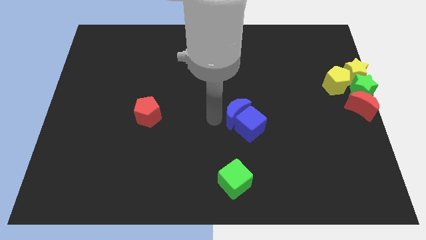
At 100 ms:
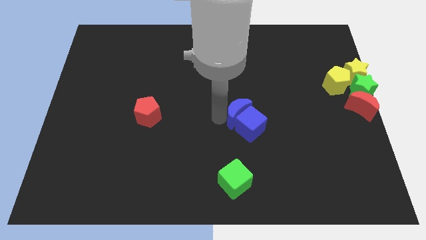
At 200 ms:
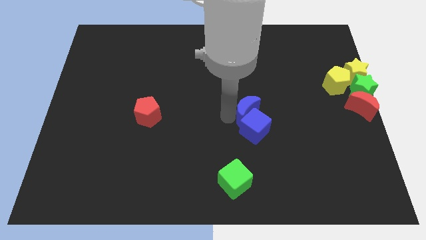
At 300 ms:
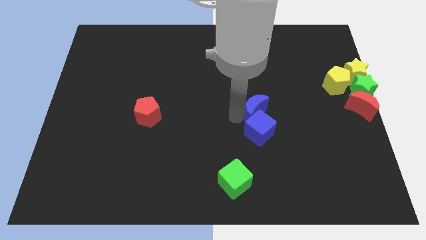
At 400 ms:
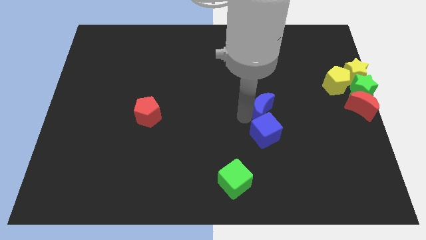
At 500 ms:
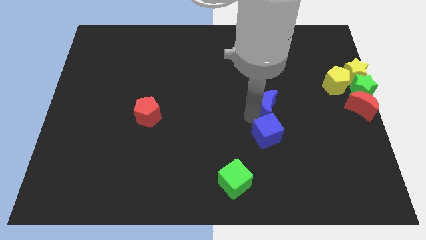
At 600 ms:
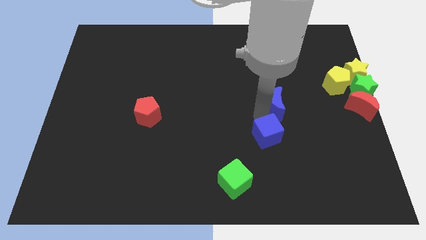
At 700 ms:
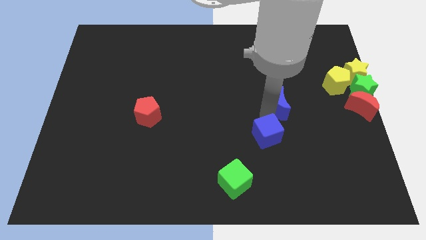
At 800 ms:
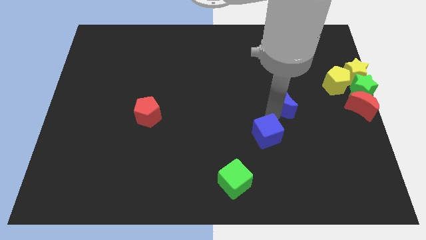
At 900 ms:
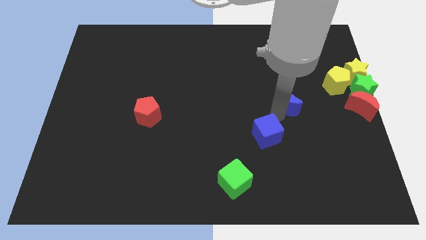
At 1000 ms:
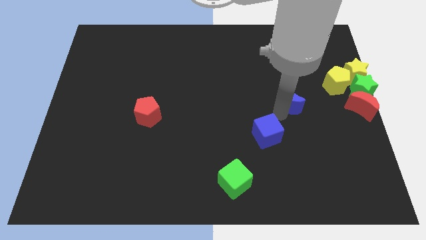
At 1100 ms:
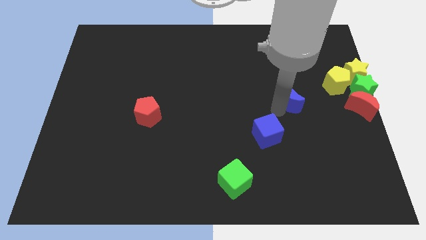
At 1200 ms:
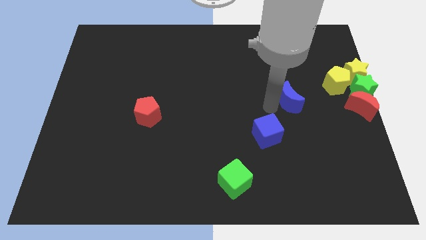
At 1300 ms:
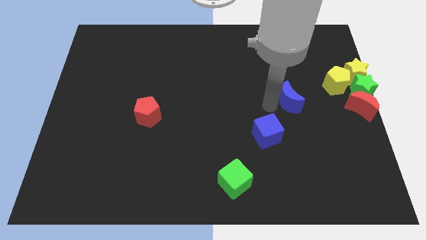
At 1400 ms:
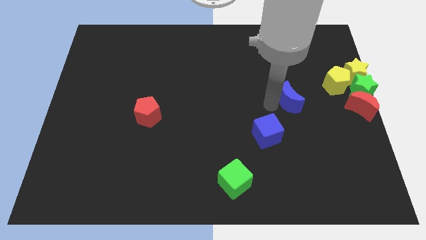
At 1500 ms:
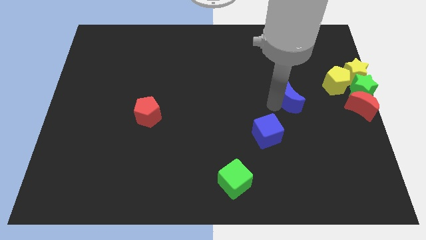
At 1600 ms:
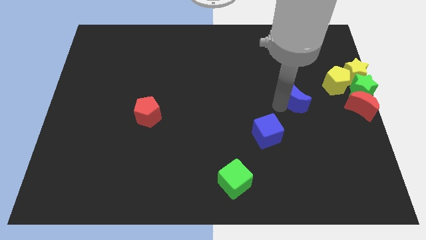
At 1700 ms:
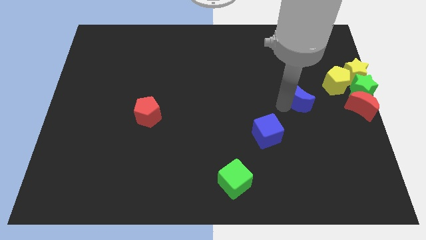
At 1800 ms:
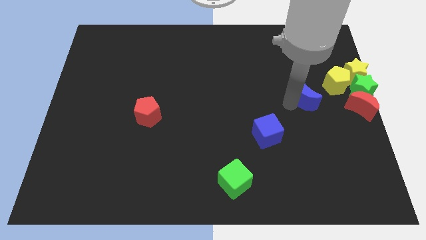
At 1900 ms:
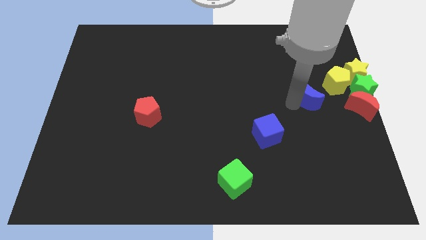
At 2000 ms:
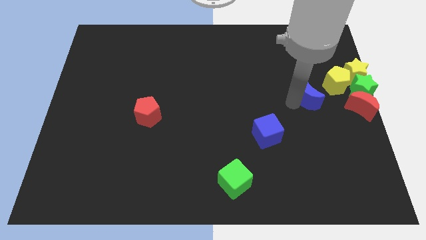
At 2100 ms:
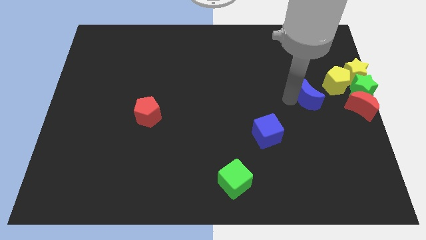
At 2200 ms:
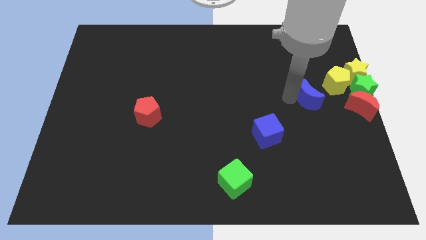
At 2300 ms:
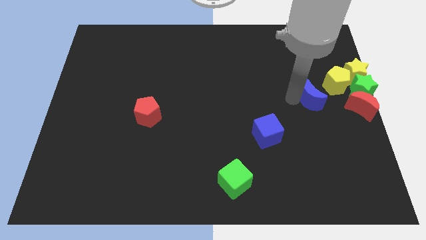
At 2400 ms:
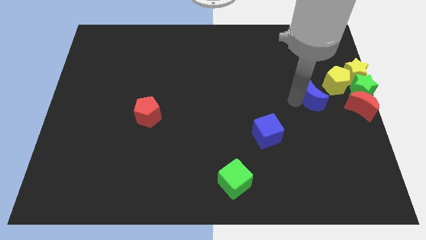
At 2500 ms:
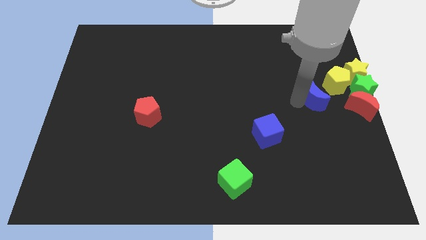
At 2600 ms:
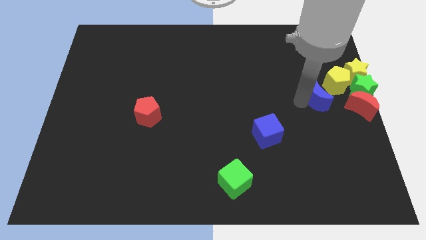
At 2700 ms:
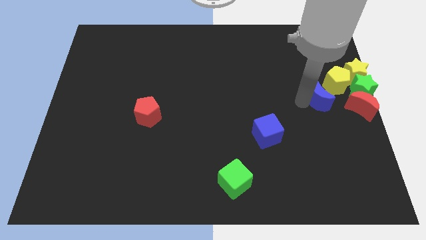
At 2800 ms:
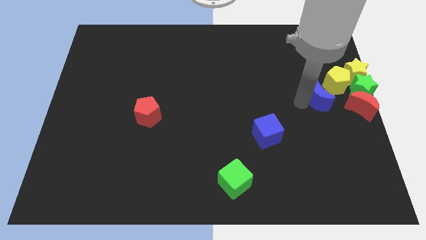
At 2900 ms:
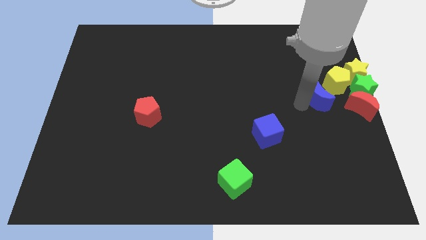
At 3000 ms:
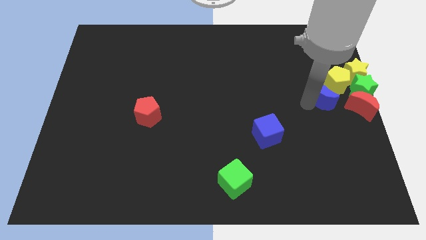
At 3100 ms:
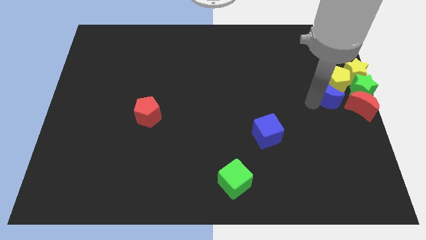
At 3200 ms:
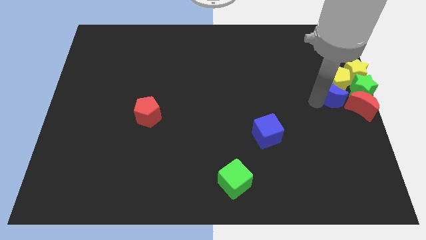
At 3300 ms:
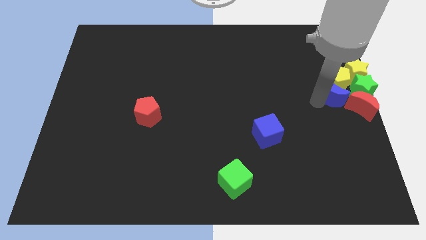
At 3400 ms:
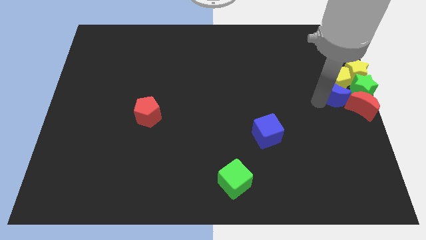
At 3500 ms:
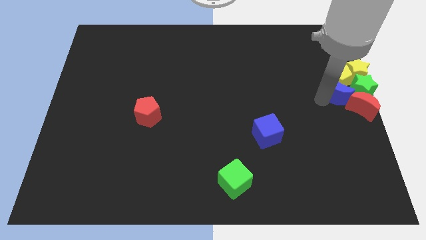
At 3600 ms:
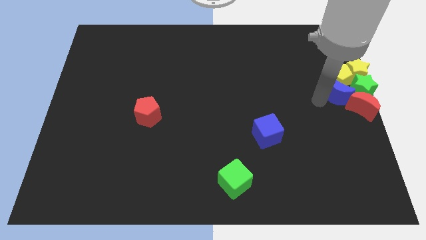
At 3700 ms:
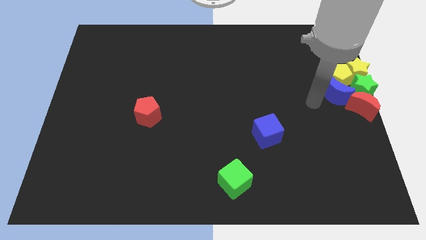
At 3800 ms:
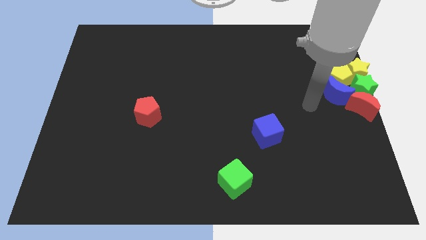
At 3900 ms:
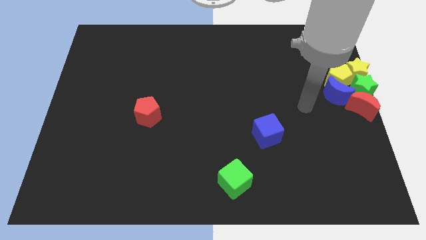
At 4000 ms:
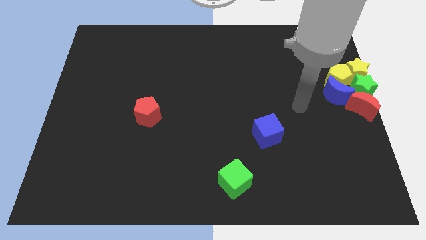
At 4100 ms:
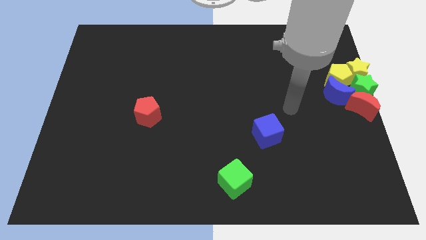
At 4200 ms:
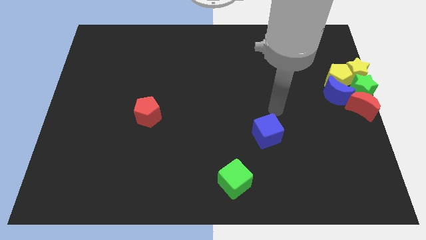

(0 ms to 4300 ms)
push blue crescent into yellow pentagon and green star

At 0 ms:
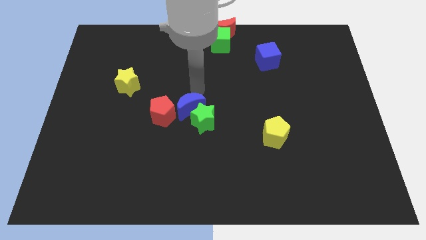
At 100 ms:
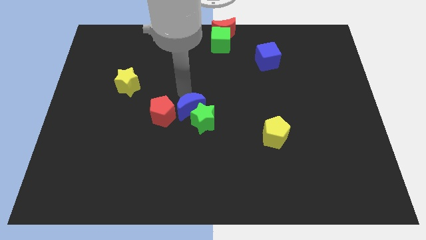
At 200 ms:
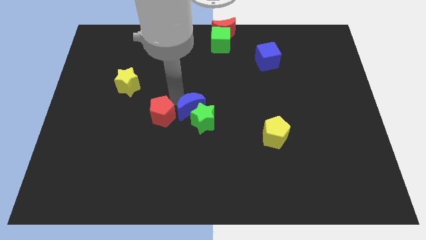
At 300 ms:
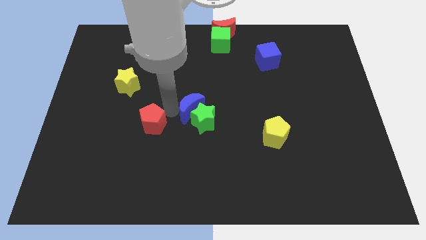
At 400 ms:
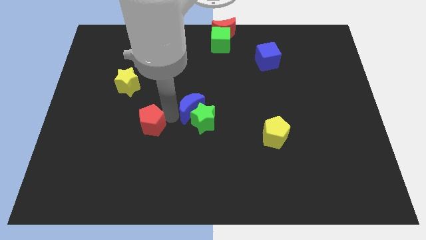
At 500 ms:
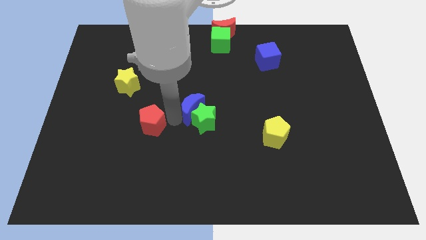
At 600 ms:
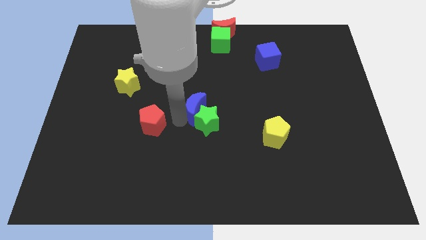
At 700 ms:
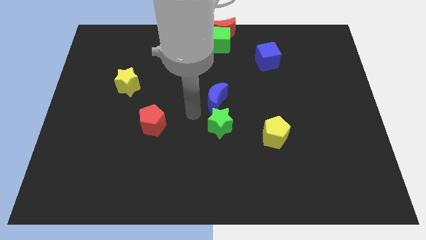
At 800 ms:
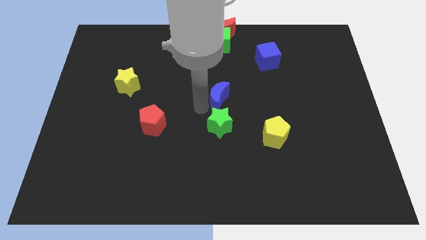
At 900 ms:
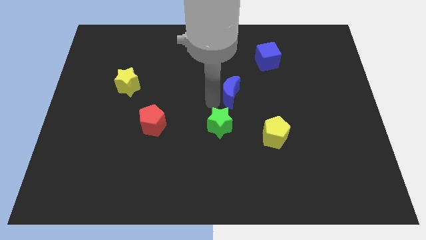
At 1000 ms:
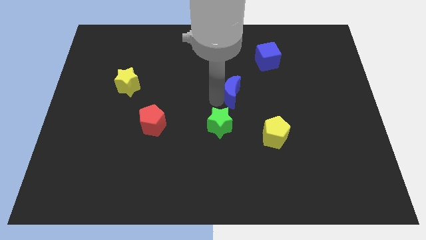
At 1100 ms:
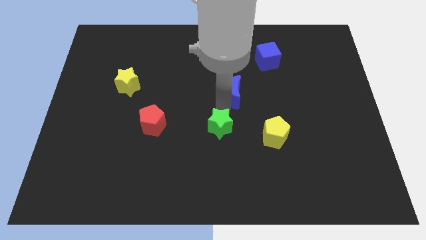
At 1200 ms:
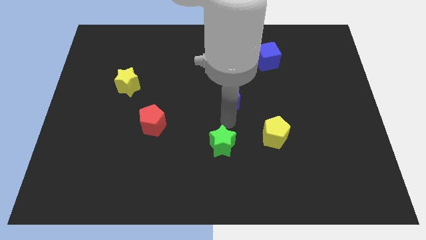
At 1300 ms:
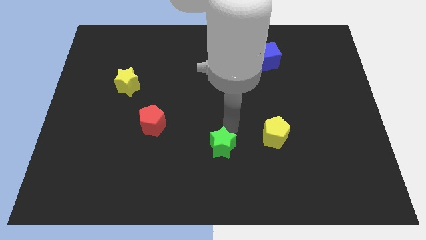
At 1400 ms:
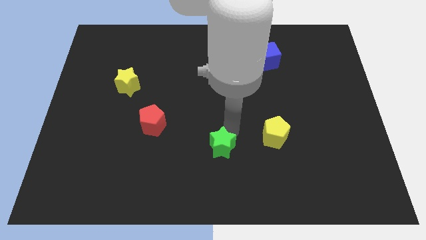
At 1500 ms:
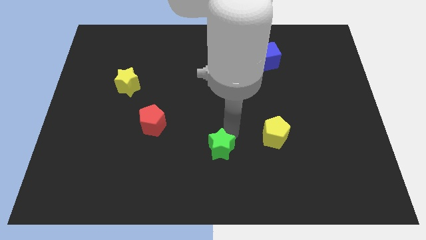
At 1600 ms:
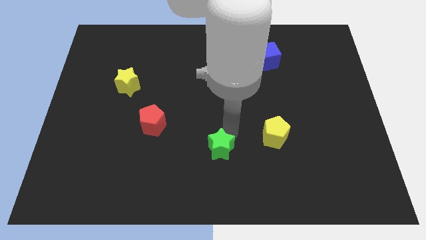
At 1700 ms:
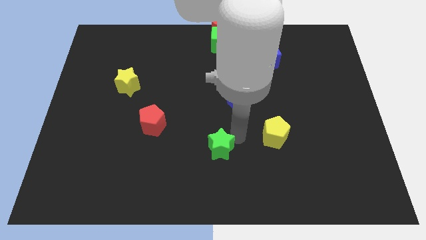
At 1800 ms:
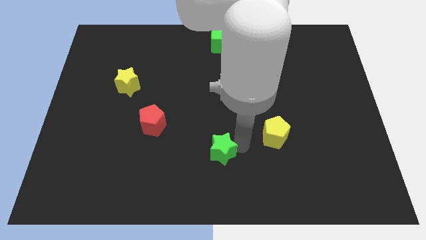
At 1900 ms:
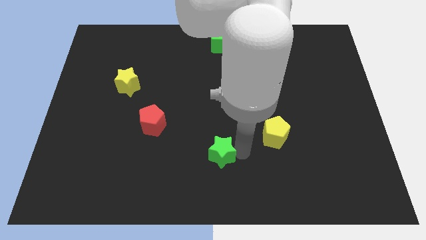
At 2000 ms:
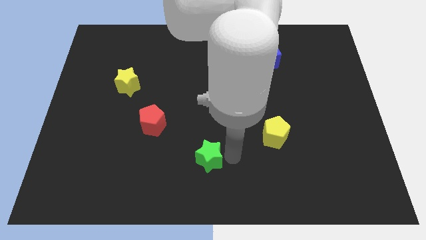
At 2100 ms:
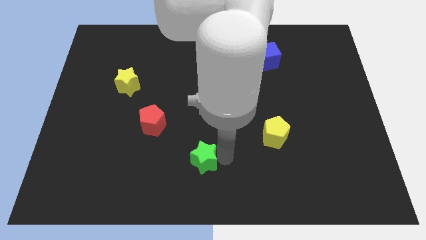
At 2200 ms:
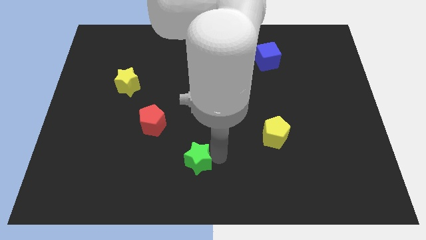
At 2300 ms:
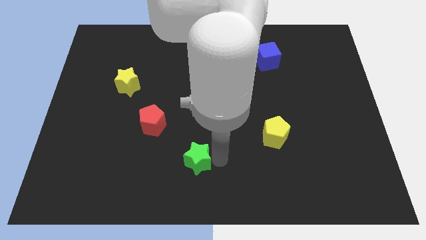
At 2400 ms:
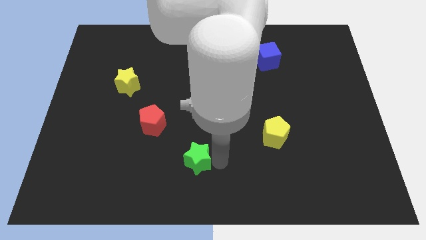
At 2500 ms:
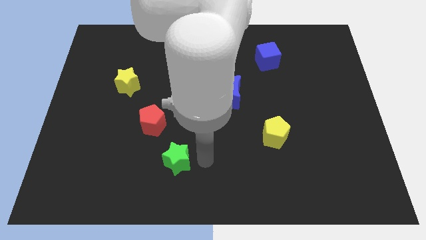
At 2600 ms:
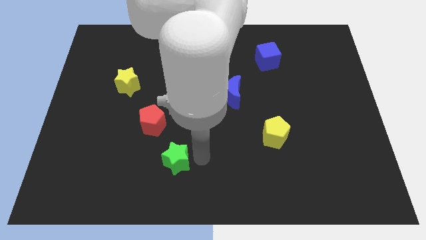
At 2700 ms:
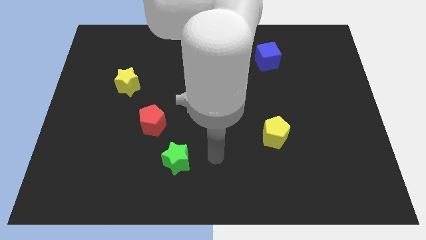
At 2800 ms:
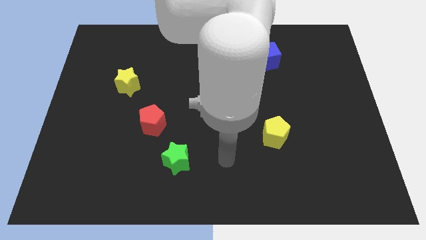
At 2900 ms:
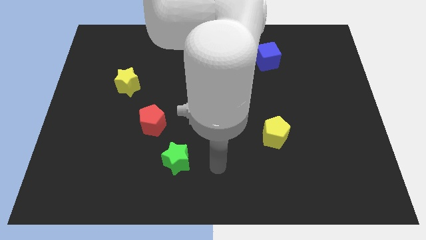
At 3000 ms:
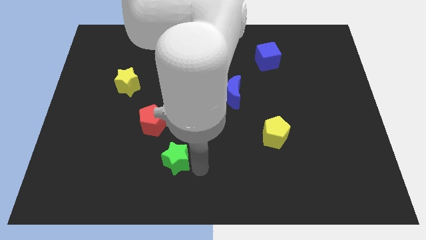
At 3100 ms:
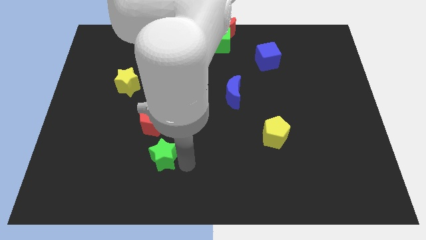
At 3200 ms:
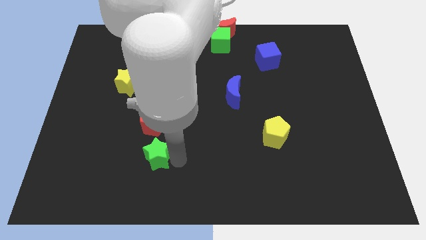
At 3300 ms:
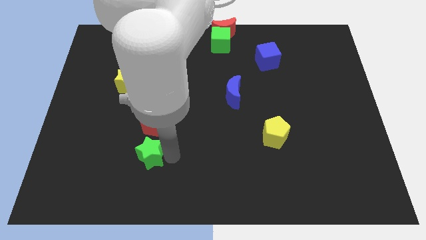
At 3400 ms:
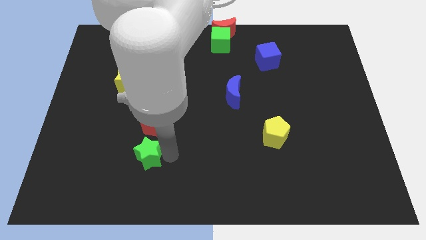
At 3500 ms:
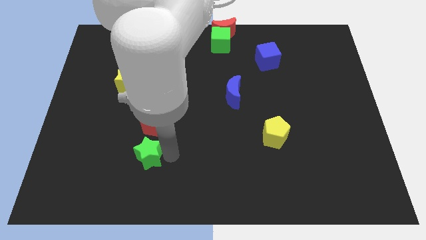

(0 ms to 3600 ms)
push green star below red pentagon

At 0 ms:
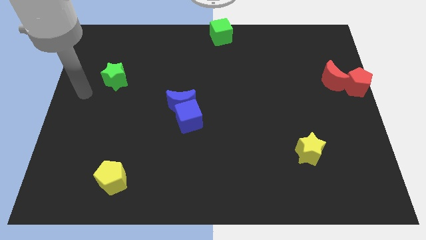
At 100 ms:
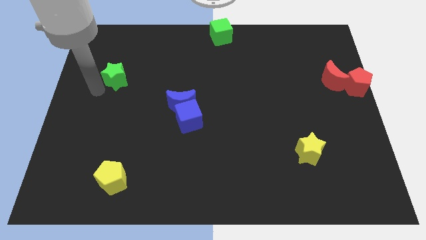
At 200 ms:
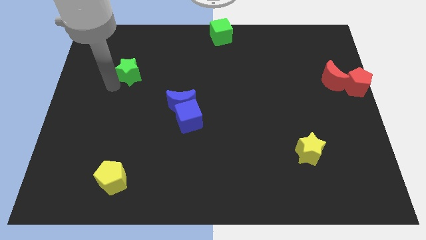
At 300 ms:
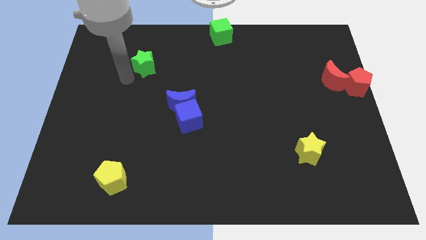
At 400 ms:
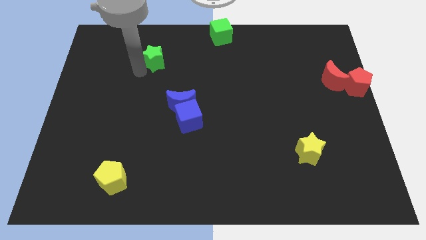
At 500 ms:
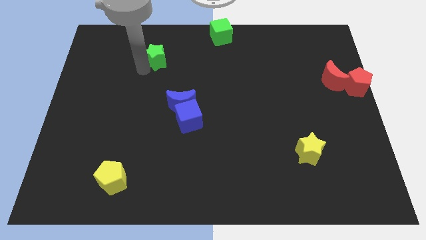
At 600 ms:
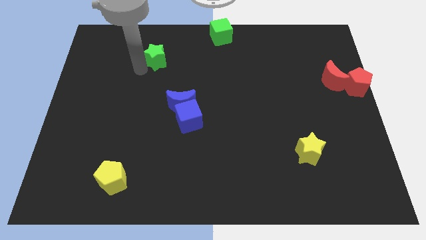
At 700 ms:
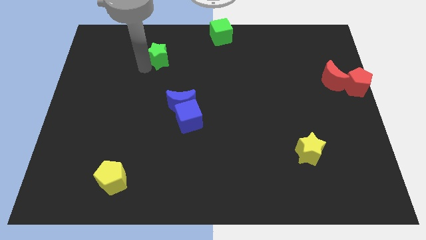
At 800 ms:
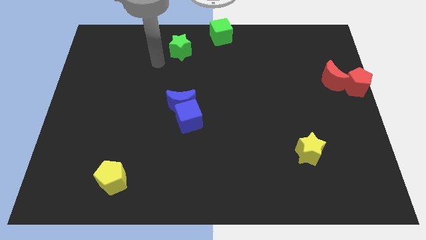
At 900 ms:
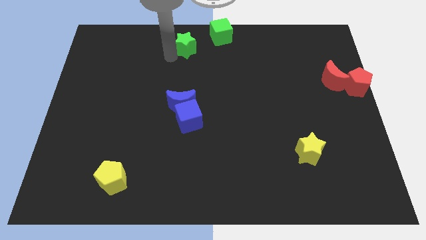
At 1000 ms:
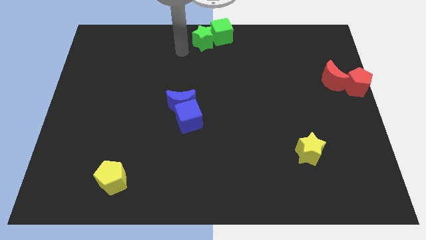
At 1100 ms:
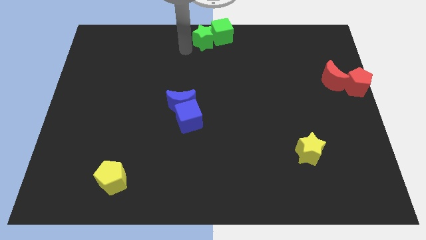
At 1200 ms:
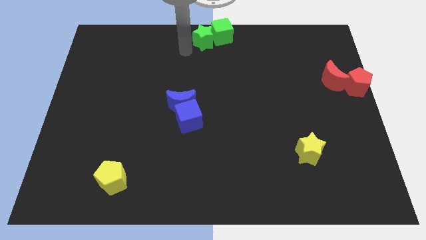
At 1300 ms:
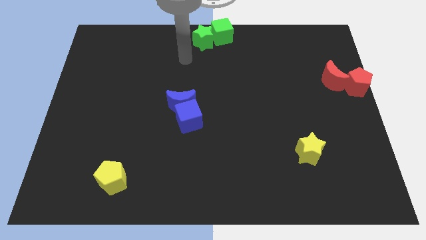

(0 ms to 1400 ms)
move the green star into the green cube
